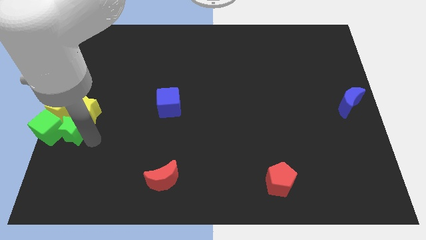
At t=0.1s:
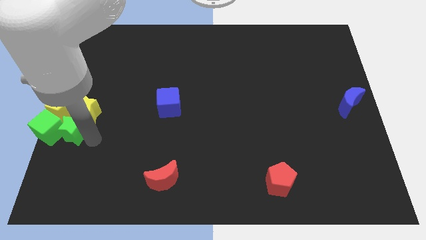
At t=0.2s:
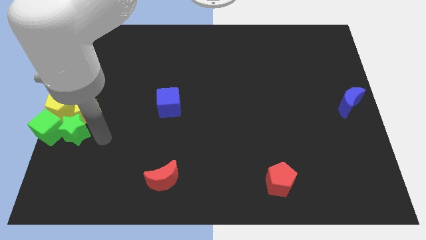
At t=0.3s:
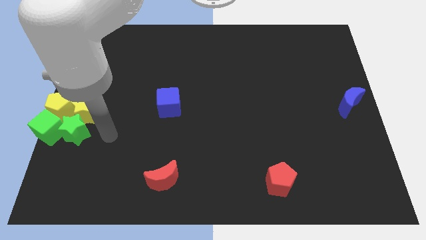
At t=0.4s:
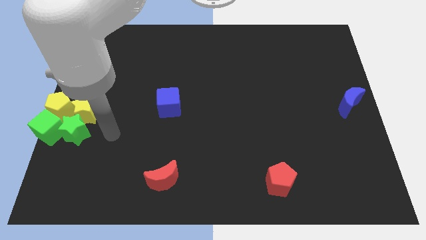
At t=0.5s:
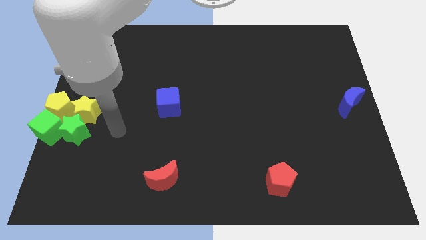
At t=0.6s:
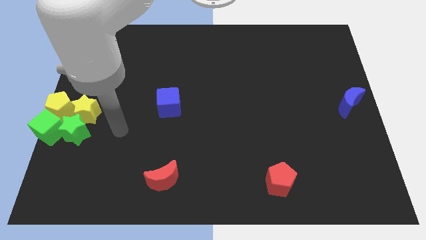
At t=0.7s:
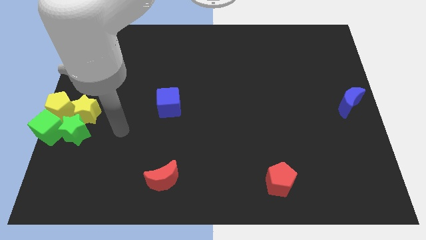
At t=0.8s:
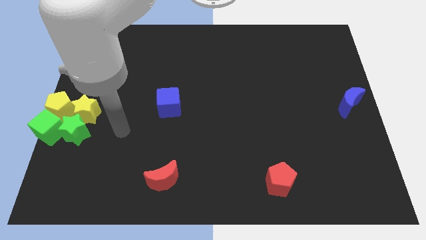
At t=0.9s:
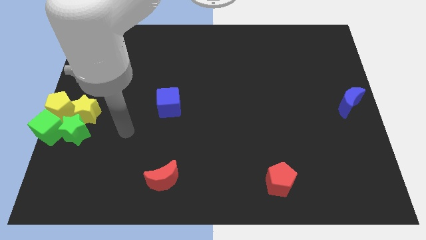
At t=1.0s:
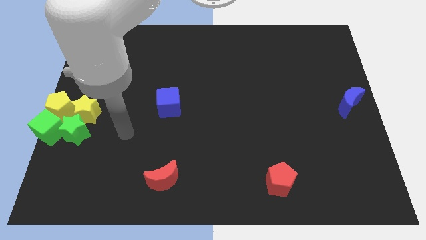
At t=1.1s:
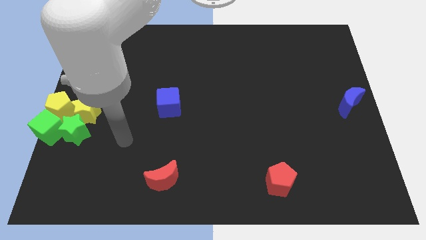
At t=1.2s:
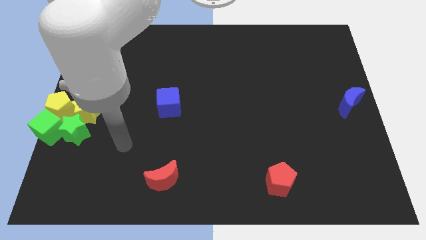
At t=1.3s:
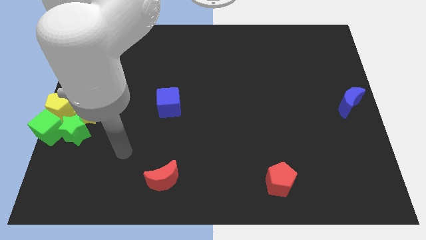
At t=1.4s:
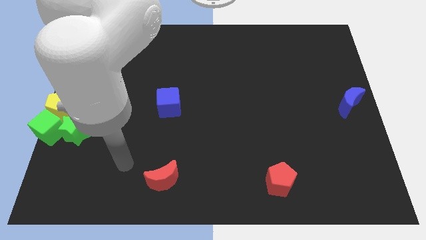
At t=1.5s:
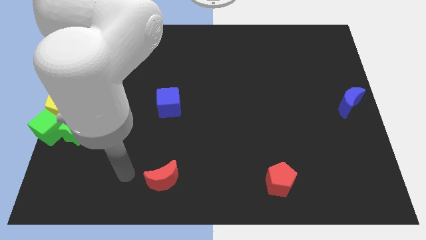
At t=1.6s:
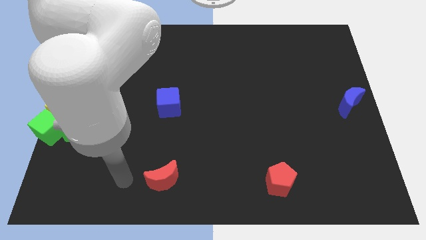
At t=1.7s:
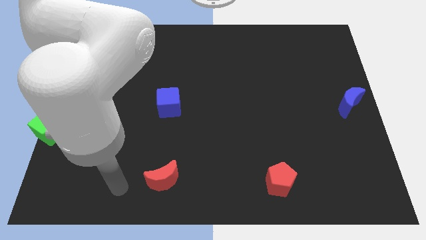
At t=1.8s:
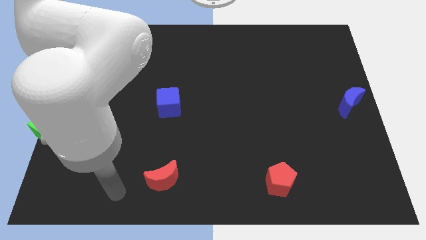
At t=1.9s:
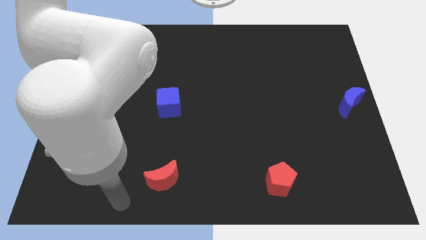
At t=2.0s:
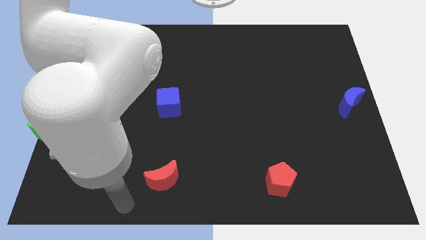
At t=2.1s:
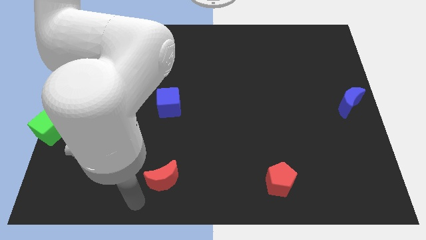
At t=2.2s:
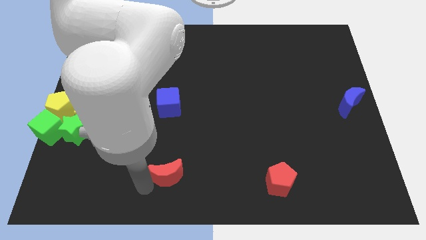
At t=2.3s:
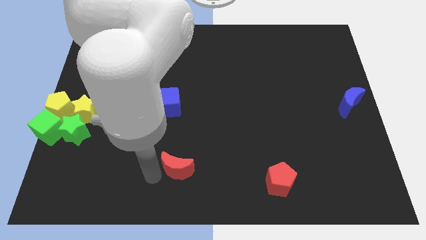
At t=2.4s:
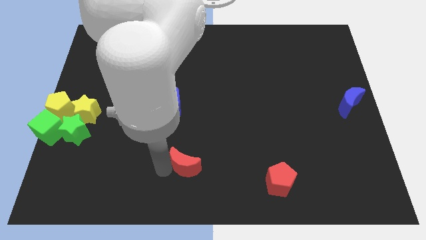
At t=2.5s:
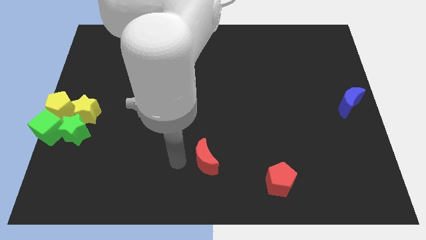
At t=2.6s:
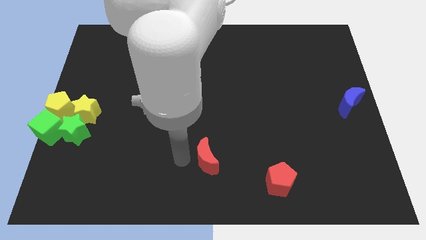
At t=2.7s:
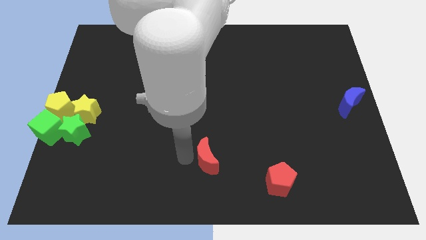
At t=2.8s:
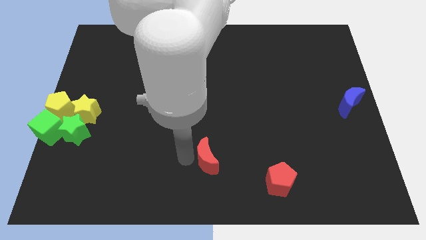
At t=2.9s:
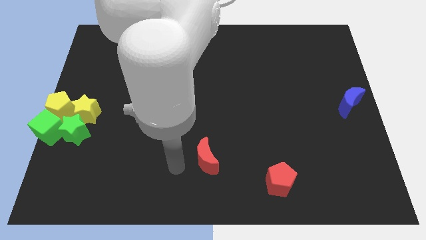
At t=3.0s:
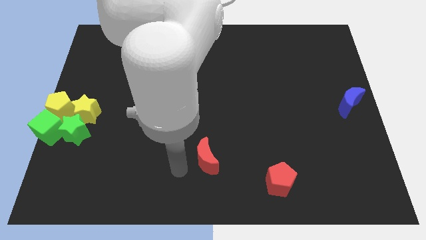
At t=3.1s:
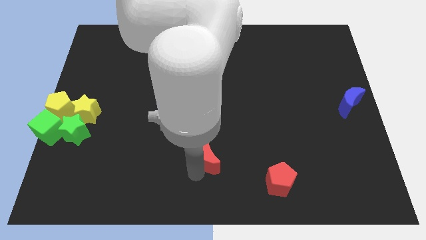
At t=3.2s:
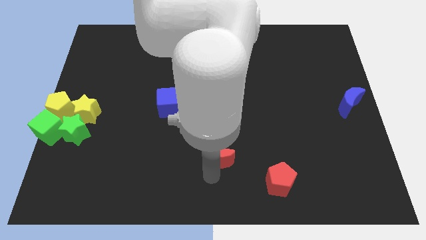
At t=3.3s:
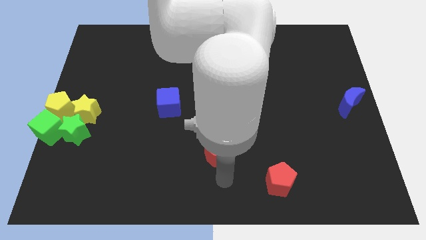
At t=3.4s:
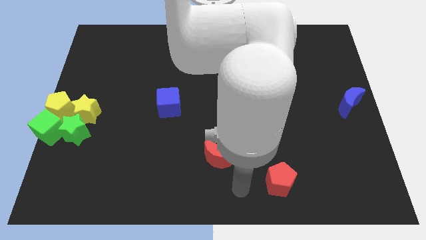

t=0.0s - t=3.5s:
put your arm at the bottom of the red crescent

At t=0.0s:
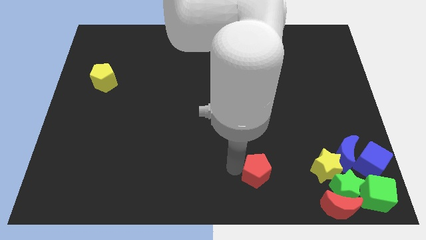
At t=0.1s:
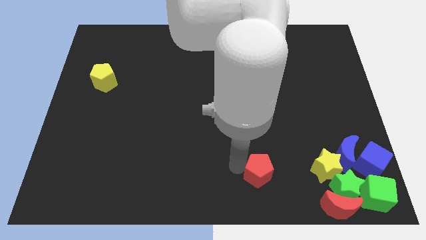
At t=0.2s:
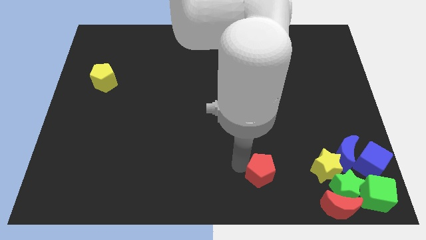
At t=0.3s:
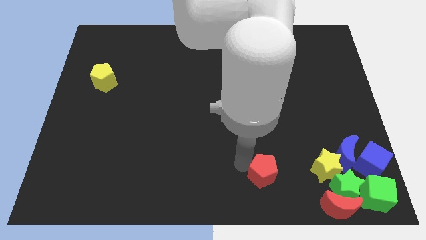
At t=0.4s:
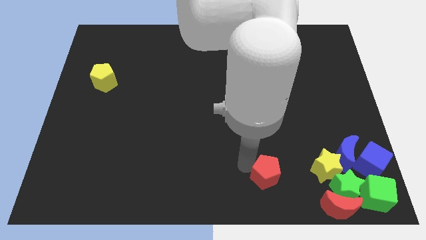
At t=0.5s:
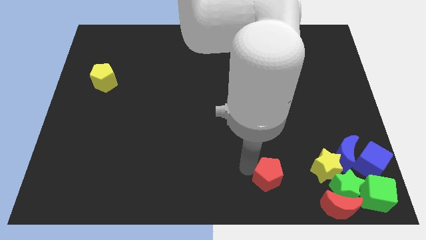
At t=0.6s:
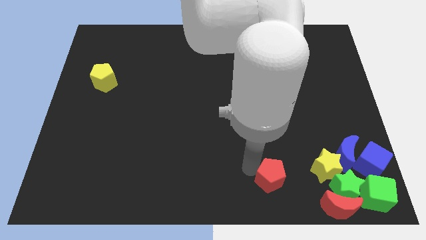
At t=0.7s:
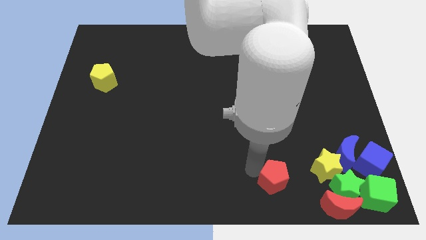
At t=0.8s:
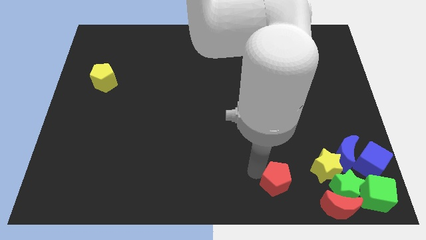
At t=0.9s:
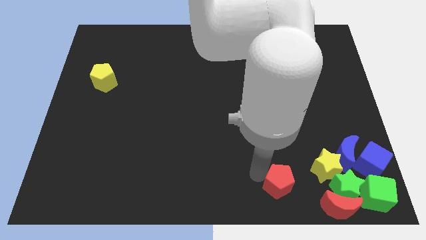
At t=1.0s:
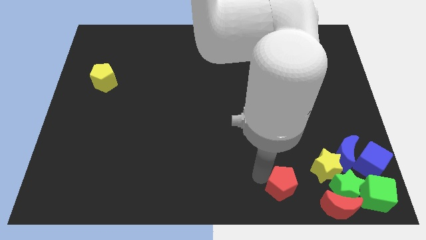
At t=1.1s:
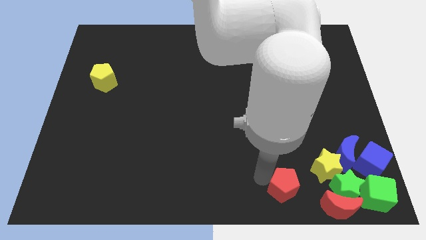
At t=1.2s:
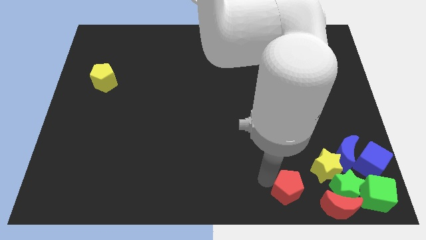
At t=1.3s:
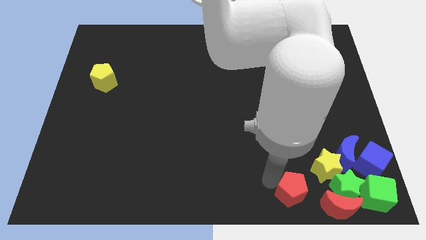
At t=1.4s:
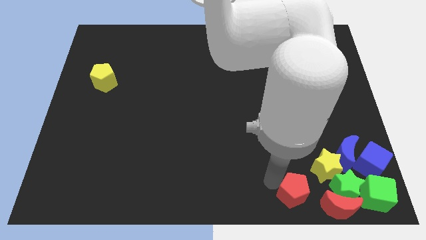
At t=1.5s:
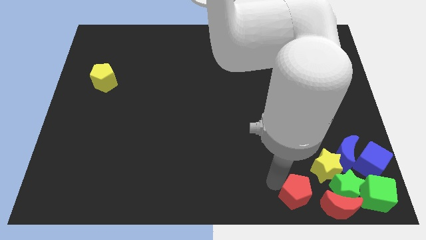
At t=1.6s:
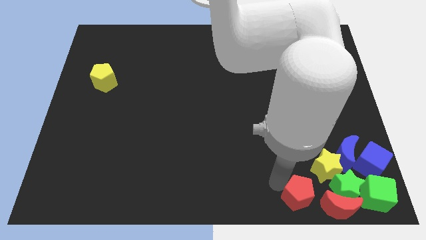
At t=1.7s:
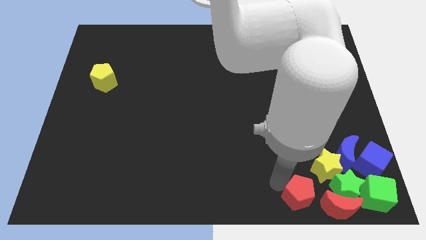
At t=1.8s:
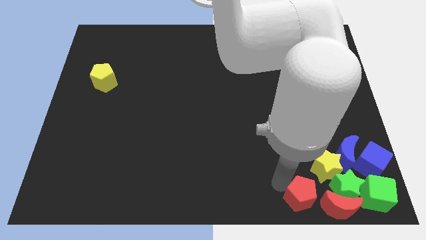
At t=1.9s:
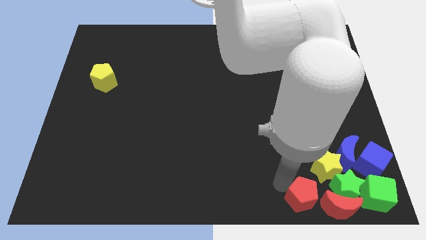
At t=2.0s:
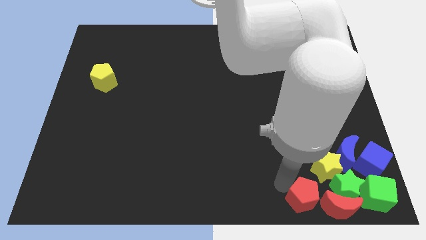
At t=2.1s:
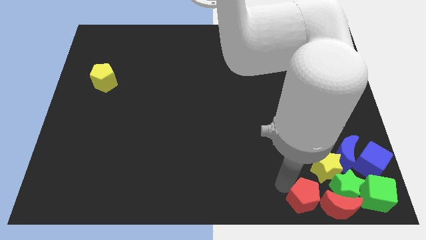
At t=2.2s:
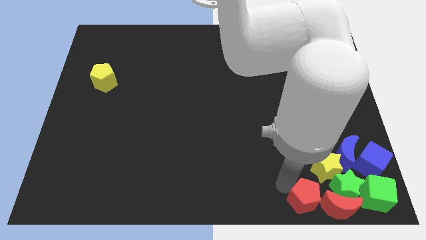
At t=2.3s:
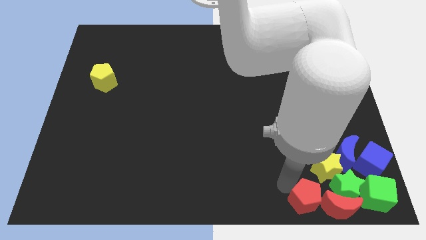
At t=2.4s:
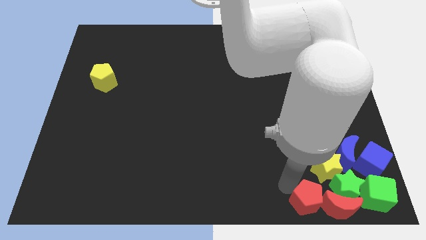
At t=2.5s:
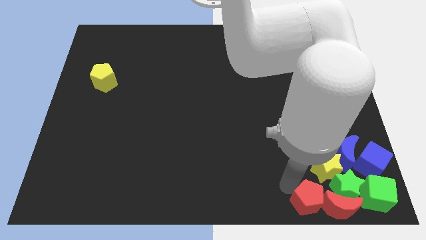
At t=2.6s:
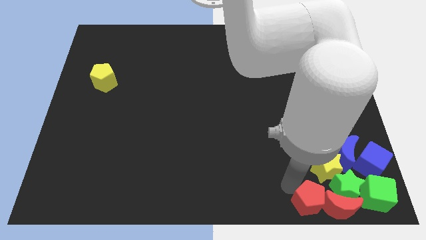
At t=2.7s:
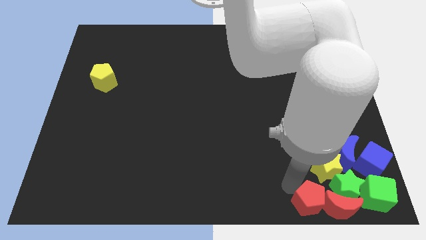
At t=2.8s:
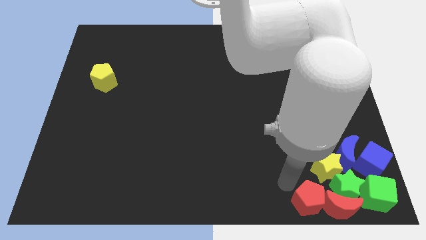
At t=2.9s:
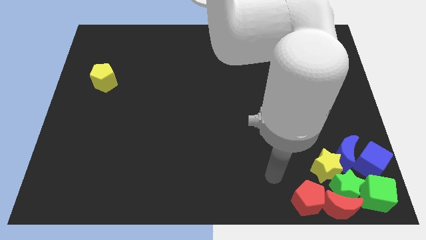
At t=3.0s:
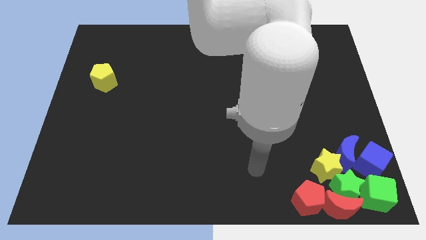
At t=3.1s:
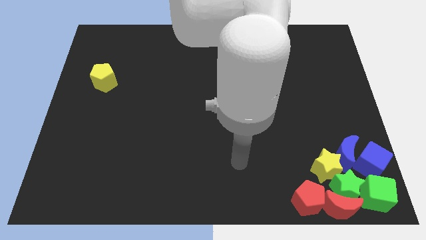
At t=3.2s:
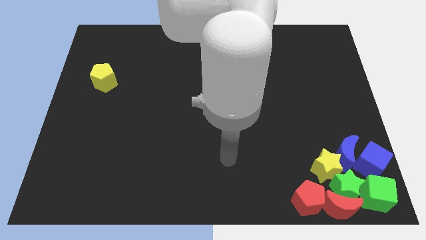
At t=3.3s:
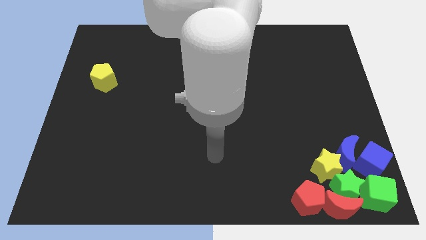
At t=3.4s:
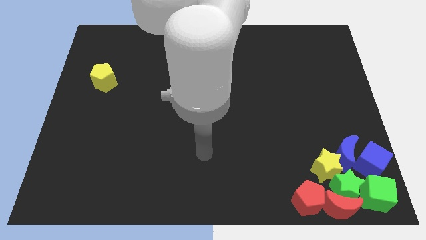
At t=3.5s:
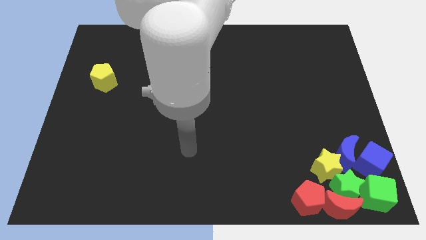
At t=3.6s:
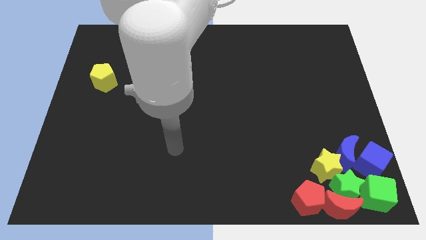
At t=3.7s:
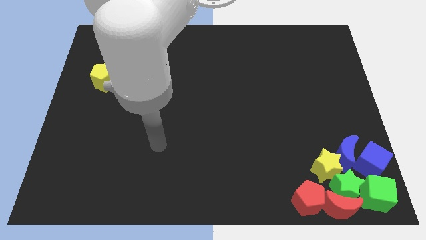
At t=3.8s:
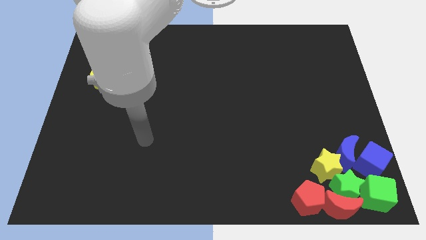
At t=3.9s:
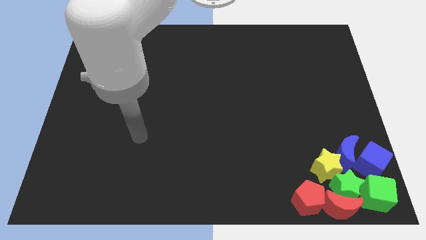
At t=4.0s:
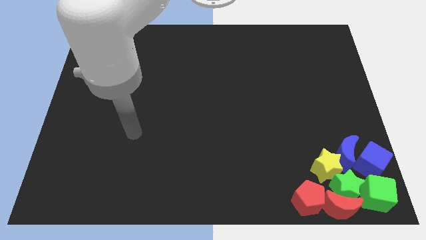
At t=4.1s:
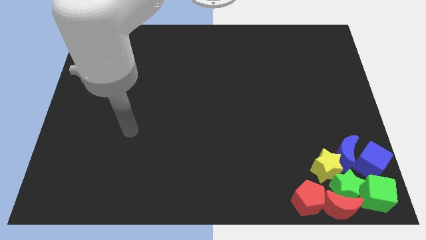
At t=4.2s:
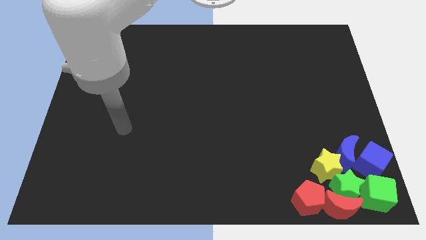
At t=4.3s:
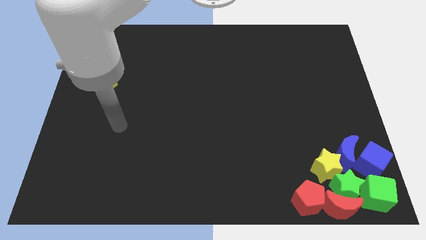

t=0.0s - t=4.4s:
move the red pentagon left to red moon

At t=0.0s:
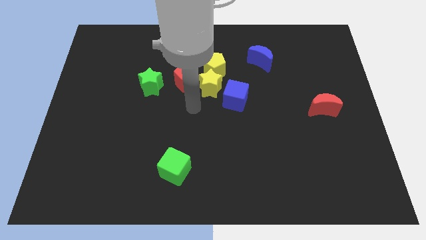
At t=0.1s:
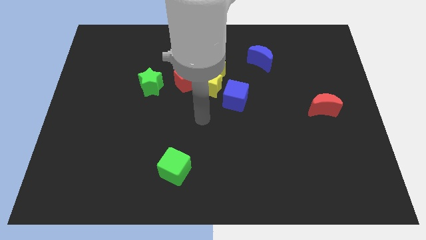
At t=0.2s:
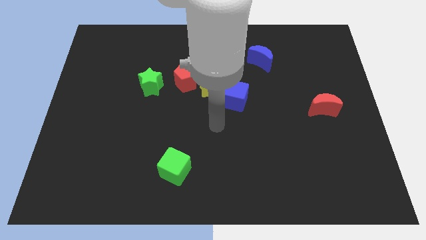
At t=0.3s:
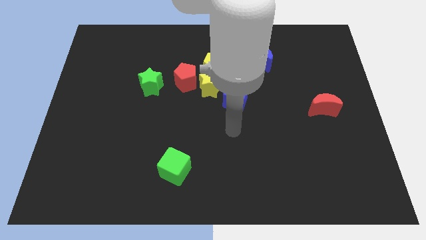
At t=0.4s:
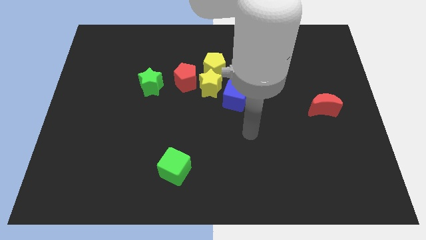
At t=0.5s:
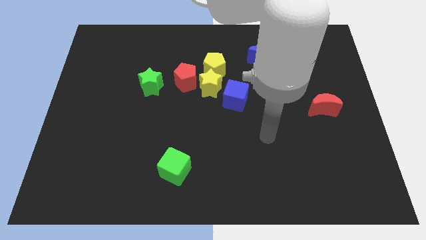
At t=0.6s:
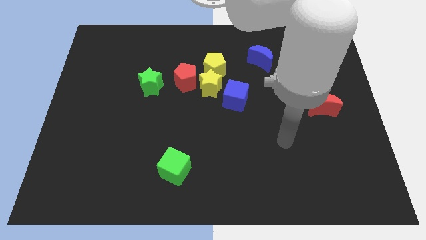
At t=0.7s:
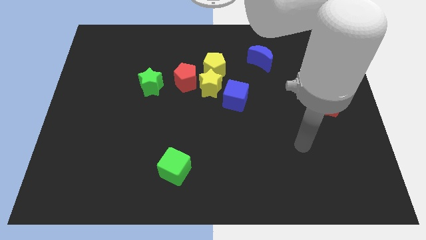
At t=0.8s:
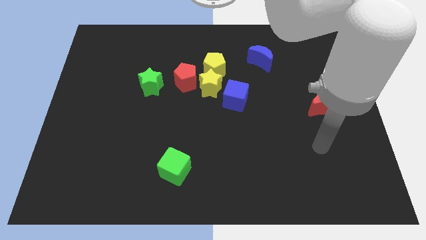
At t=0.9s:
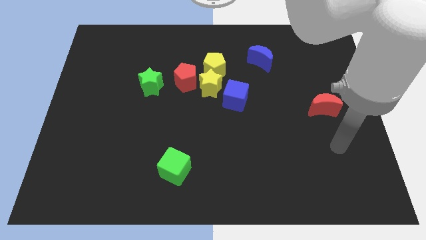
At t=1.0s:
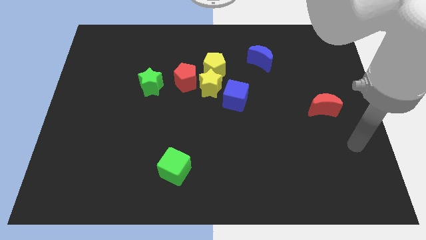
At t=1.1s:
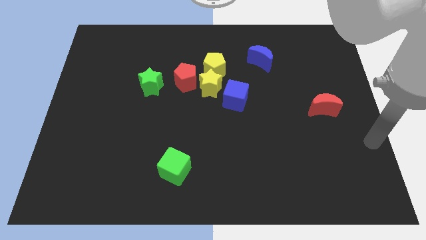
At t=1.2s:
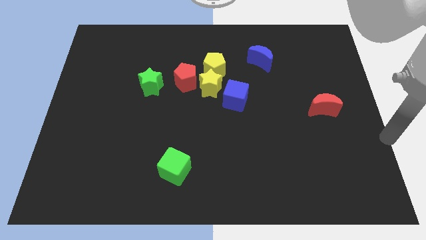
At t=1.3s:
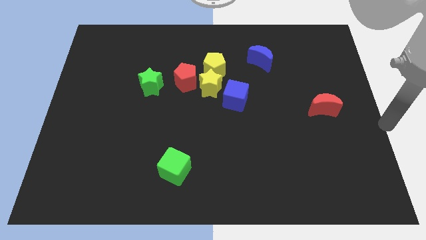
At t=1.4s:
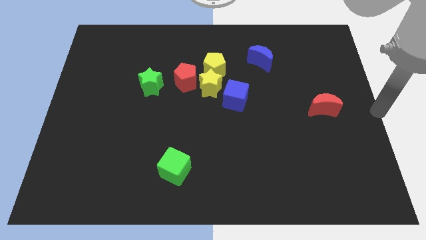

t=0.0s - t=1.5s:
point your arm at the center right of the board
